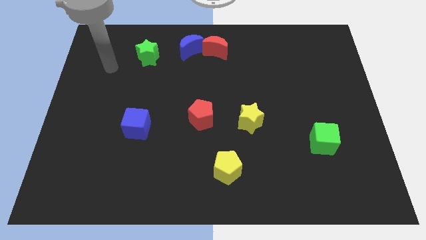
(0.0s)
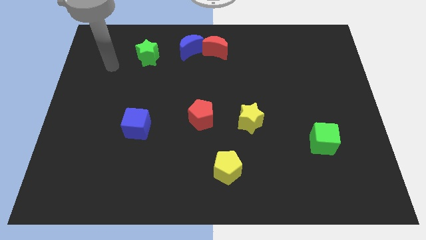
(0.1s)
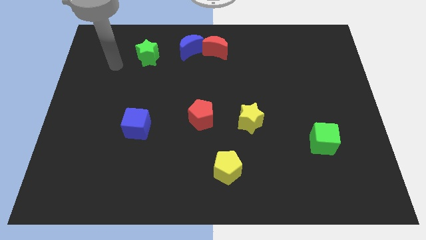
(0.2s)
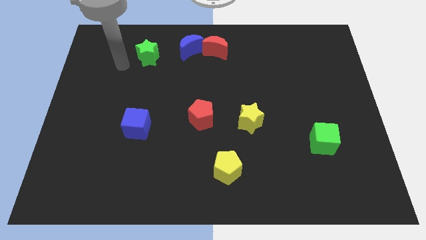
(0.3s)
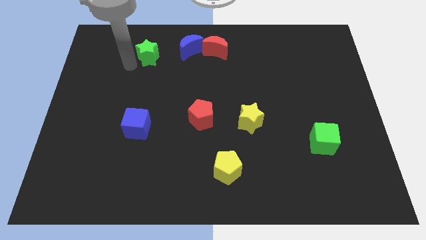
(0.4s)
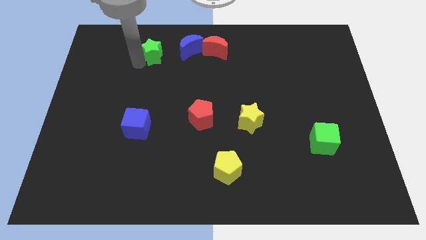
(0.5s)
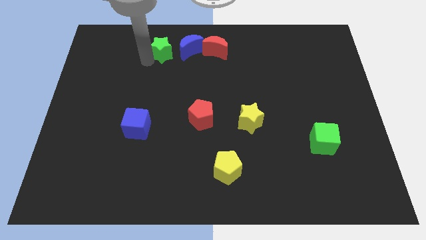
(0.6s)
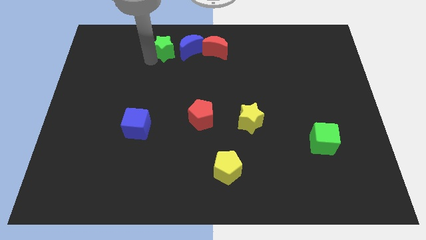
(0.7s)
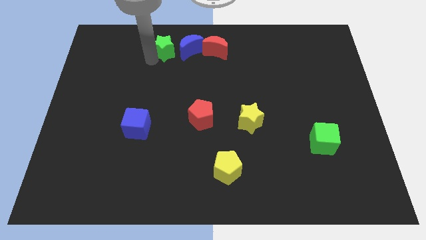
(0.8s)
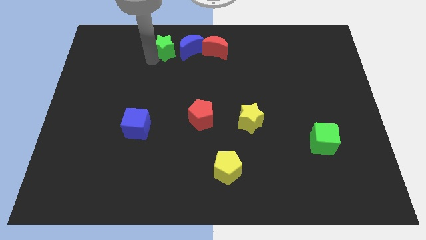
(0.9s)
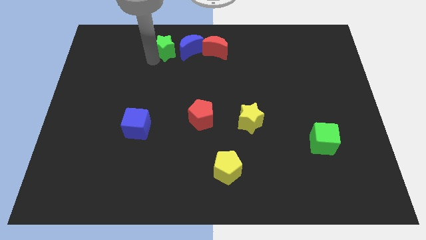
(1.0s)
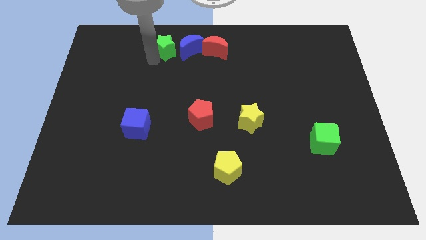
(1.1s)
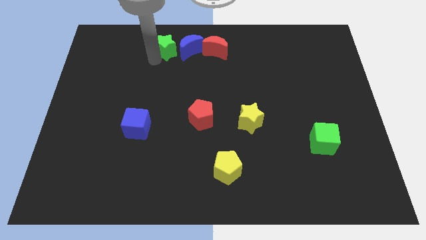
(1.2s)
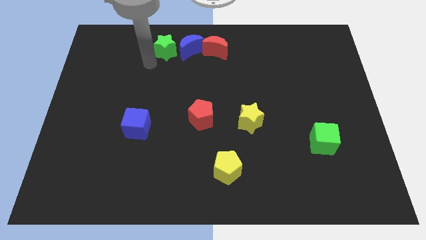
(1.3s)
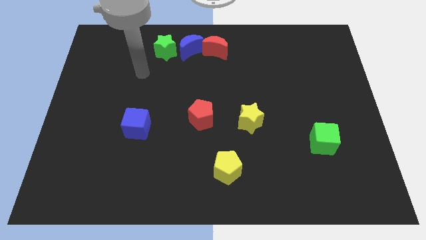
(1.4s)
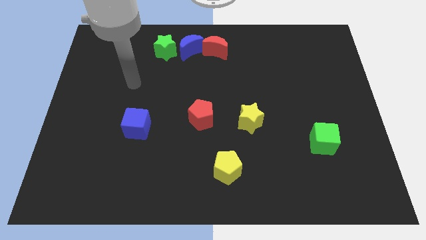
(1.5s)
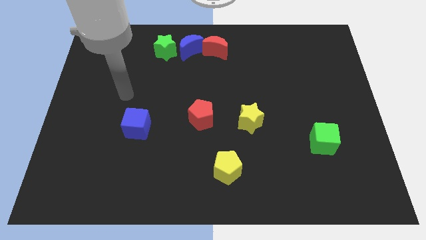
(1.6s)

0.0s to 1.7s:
slide the green star slightly towards the blue crescent

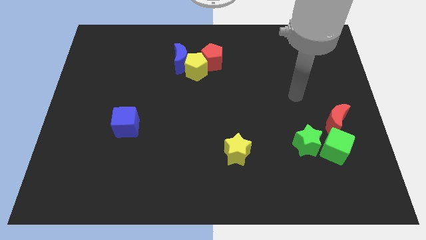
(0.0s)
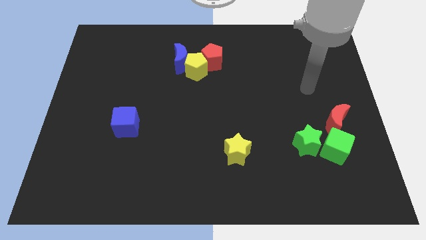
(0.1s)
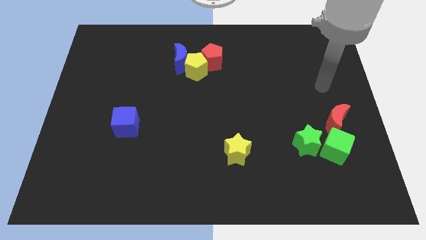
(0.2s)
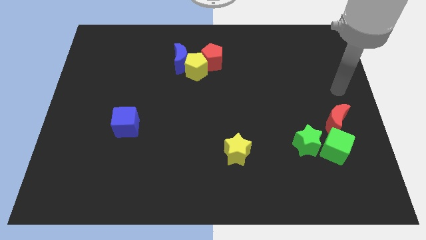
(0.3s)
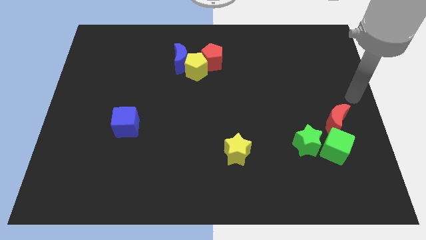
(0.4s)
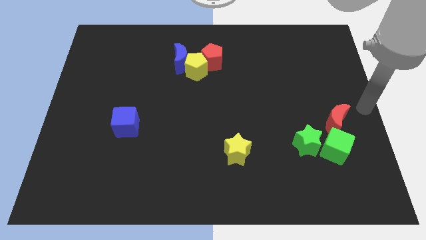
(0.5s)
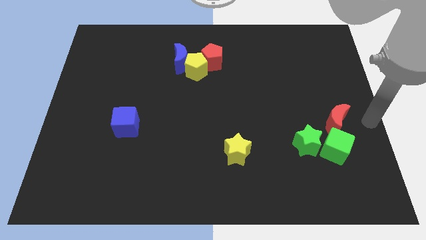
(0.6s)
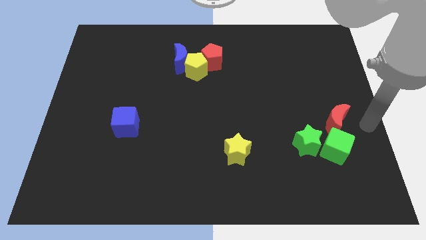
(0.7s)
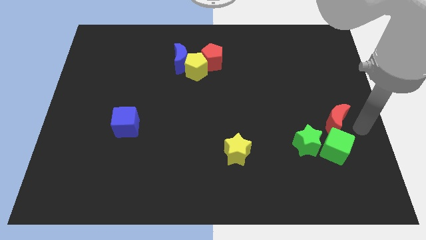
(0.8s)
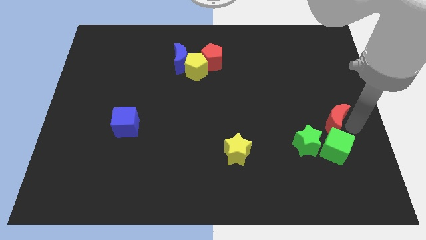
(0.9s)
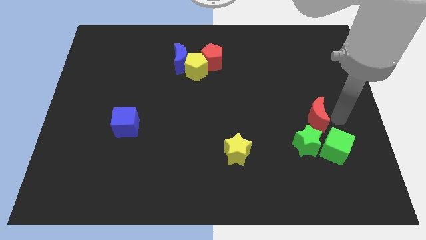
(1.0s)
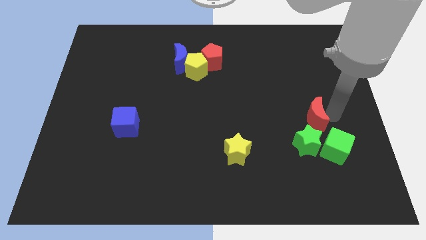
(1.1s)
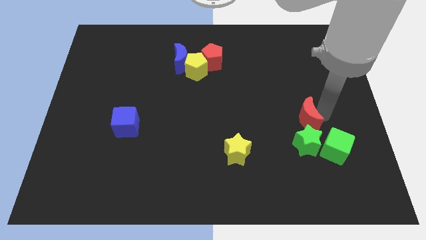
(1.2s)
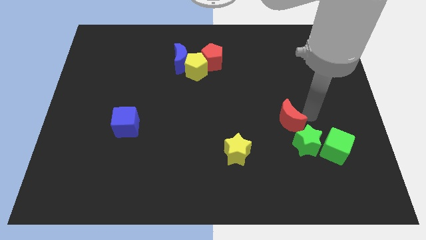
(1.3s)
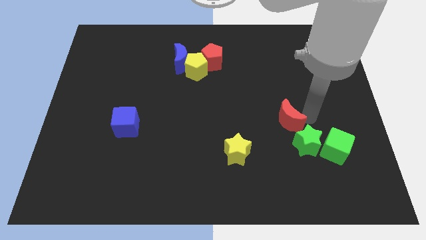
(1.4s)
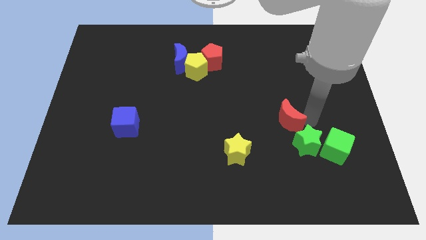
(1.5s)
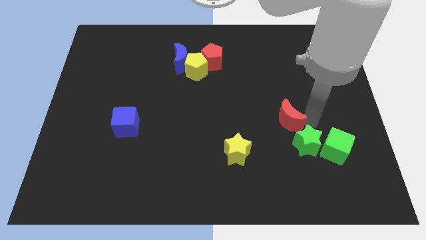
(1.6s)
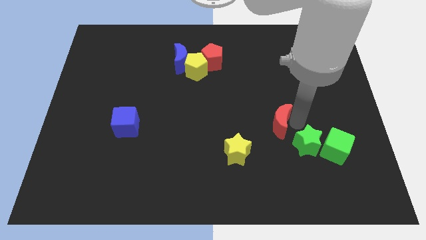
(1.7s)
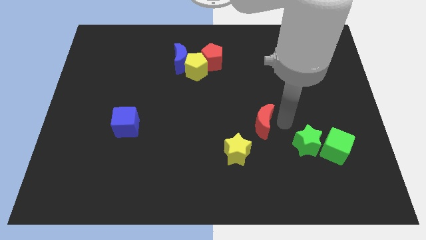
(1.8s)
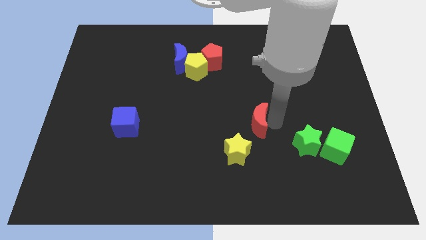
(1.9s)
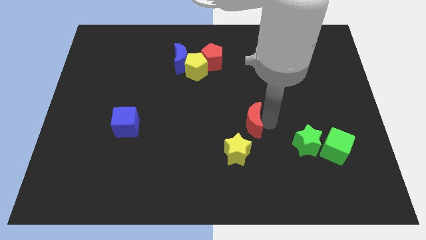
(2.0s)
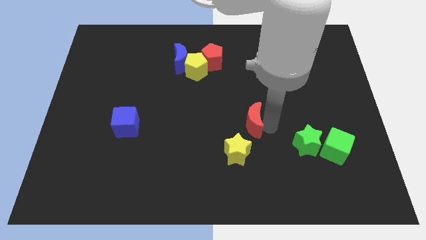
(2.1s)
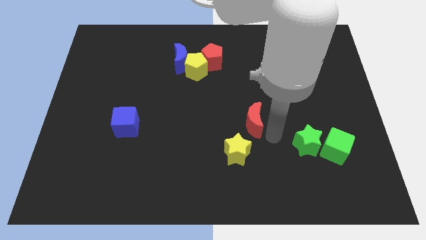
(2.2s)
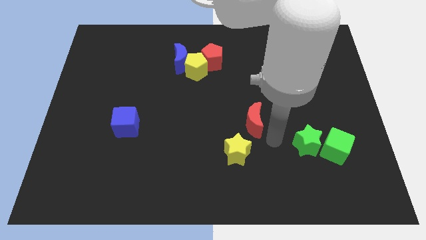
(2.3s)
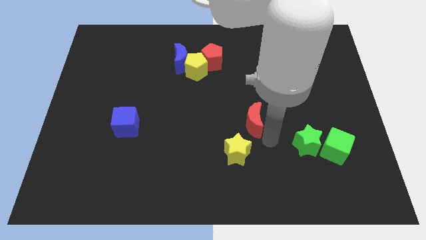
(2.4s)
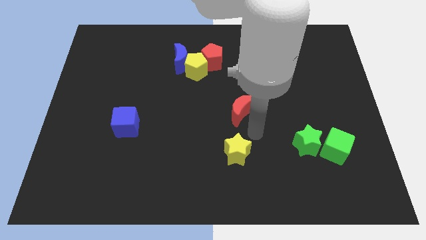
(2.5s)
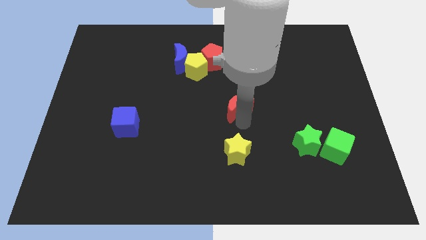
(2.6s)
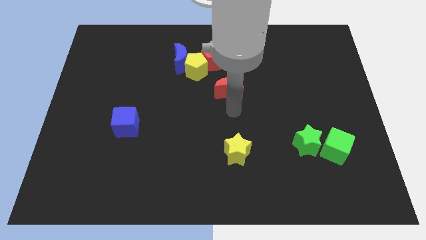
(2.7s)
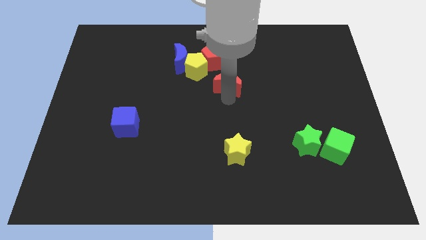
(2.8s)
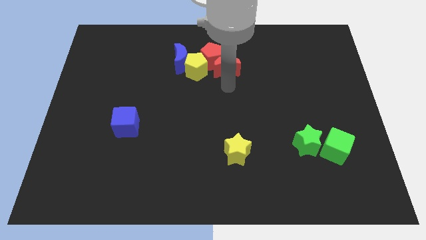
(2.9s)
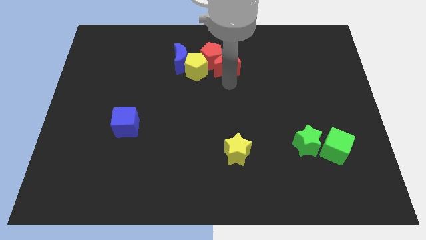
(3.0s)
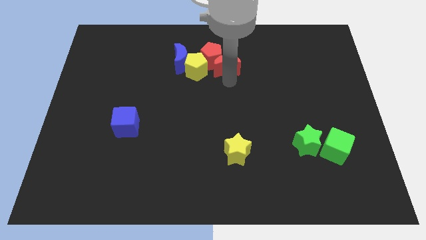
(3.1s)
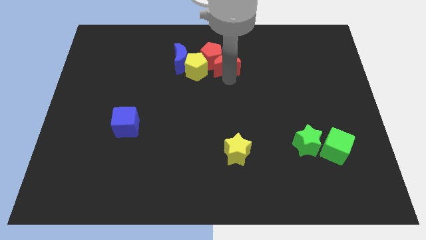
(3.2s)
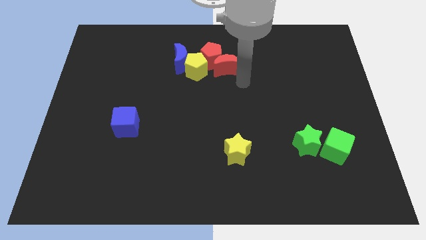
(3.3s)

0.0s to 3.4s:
push the red crescent to the right of the yellow pentagon

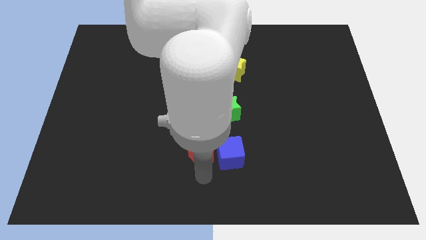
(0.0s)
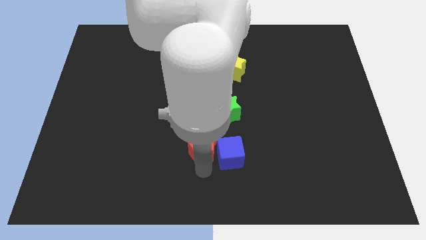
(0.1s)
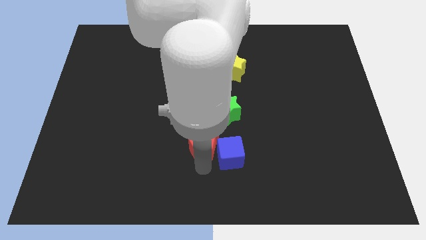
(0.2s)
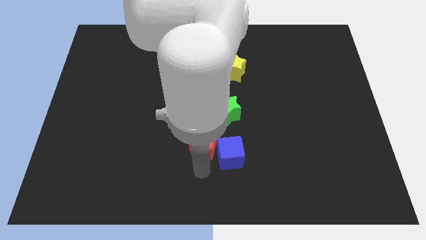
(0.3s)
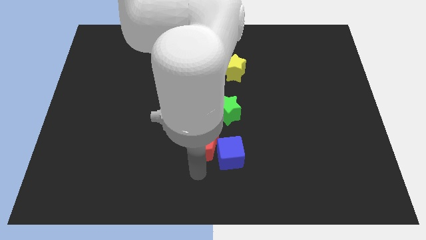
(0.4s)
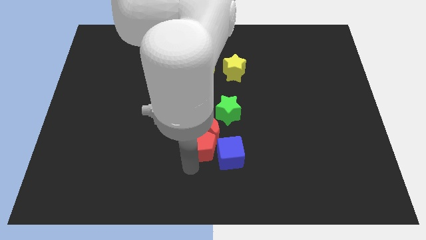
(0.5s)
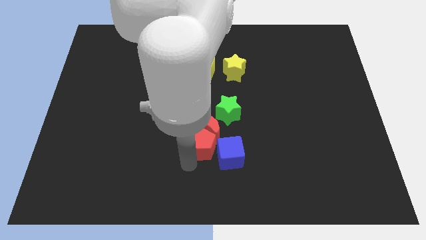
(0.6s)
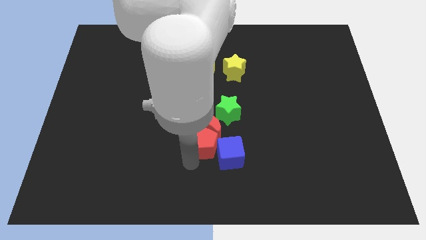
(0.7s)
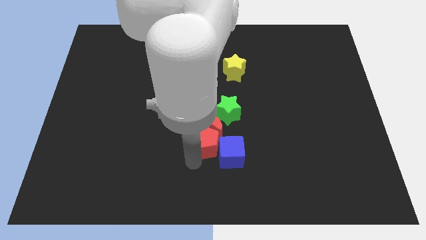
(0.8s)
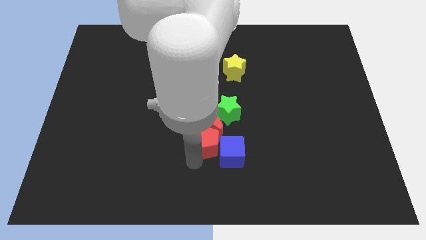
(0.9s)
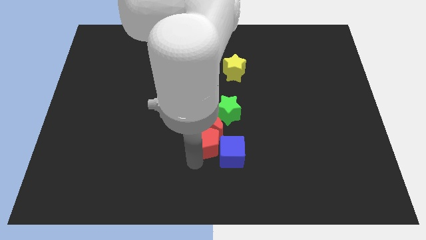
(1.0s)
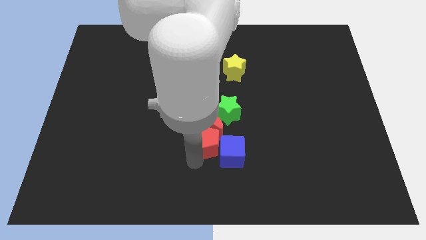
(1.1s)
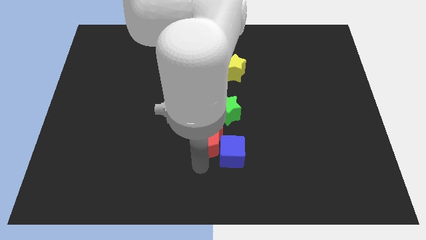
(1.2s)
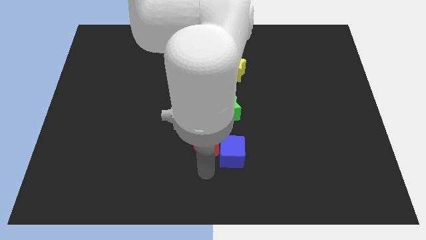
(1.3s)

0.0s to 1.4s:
slightly push the red pentagon into the red moon

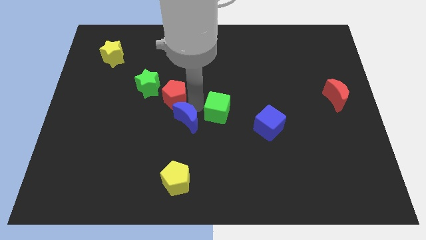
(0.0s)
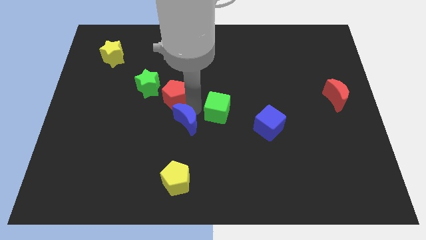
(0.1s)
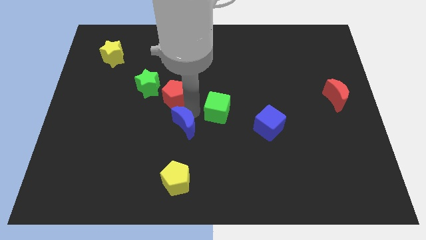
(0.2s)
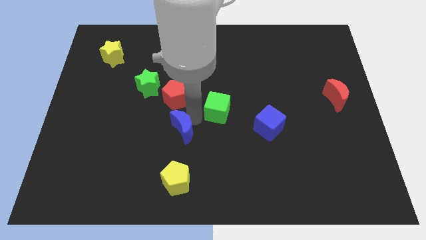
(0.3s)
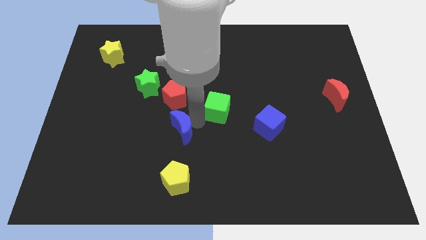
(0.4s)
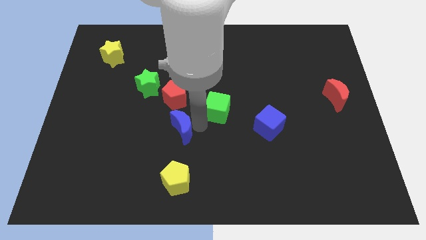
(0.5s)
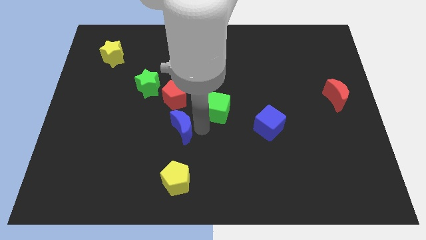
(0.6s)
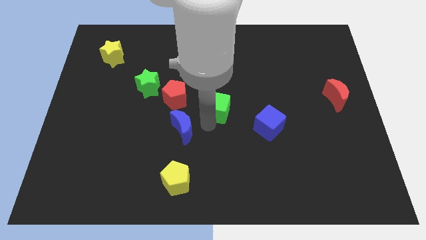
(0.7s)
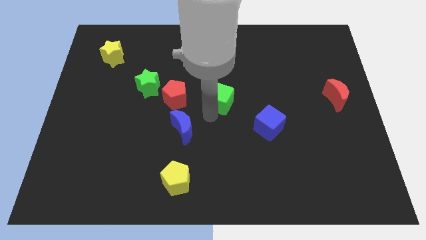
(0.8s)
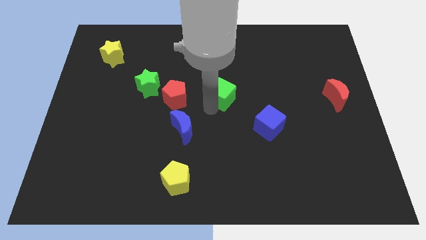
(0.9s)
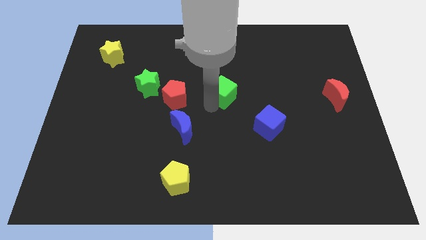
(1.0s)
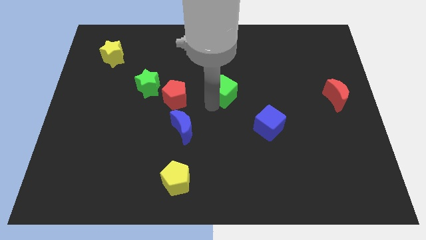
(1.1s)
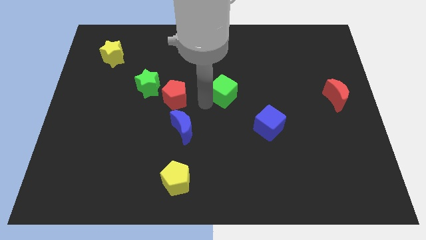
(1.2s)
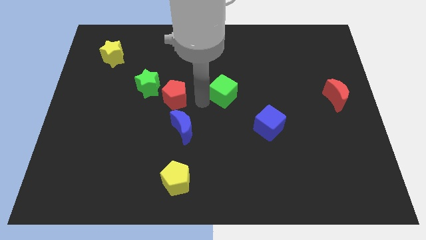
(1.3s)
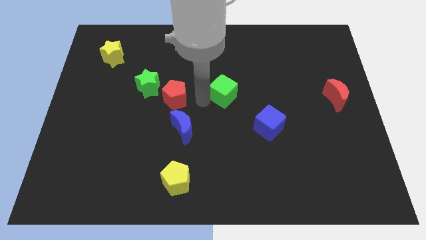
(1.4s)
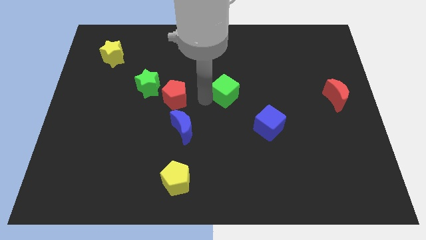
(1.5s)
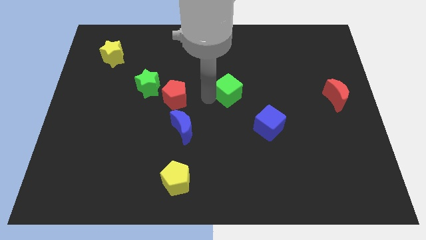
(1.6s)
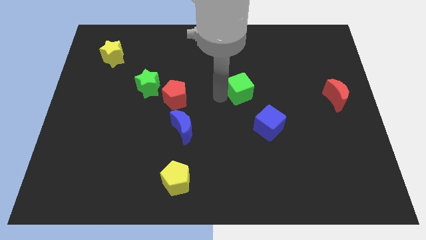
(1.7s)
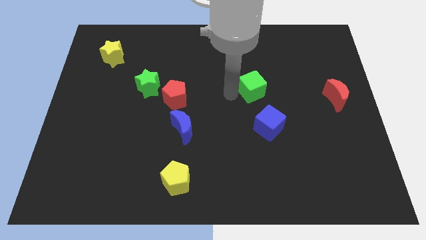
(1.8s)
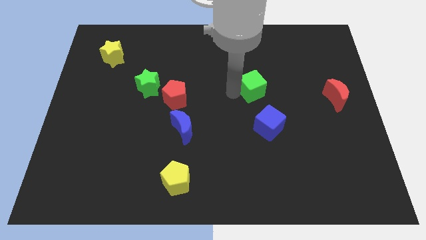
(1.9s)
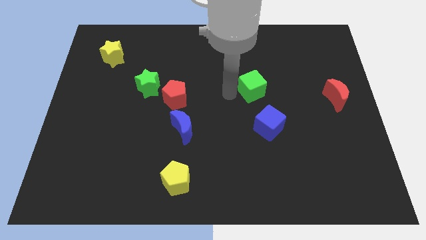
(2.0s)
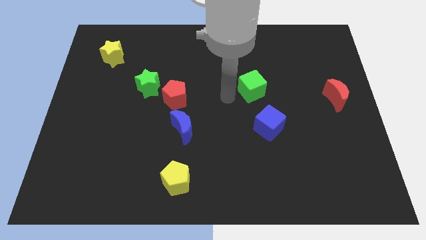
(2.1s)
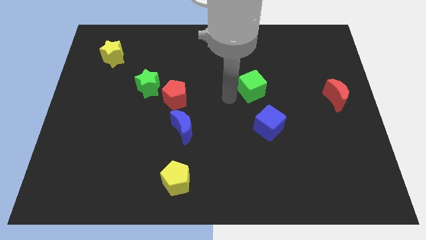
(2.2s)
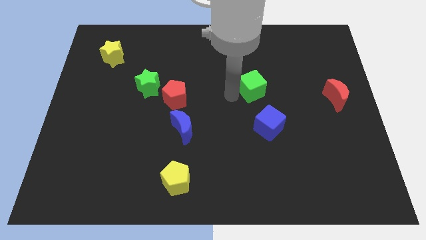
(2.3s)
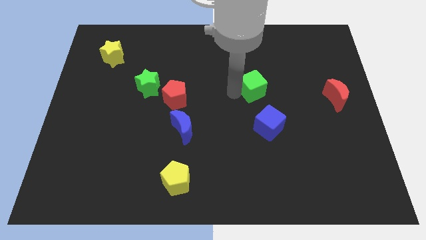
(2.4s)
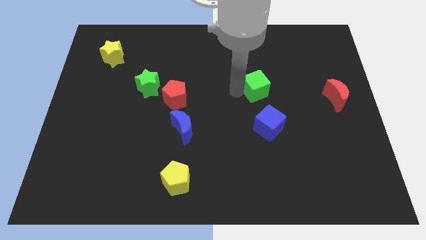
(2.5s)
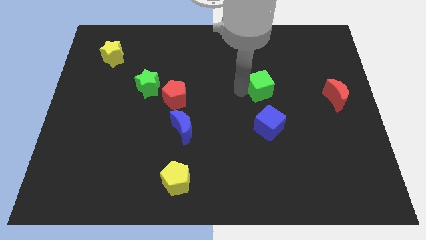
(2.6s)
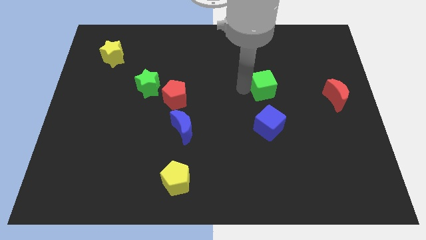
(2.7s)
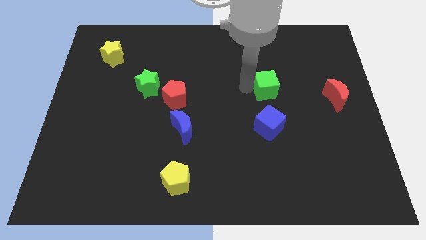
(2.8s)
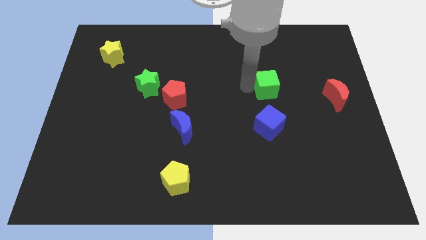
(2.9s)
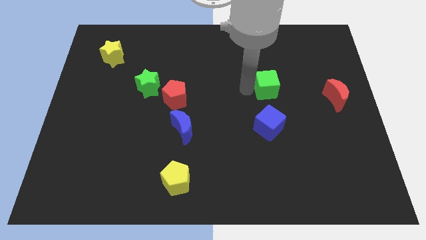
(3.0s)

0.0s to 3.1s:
separate green cube from blue moon
